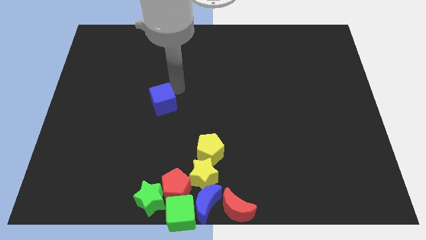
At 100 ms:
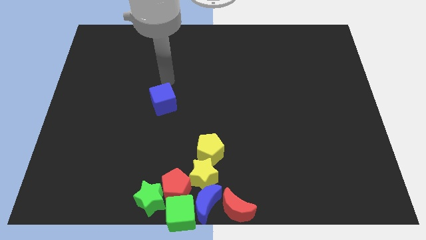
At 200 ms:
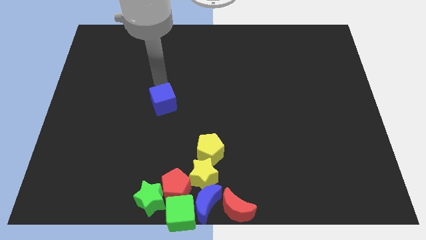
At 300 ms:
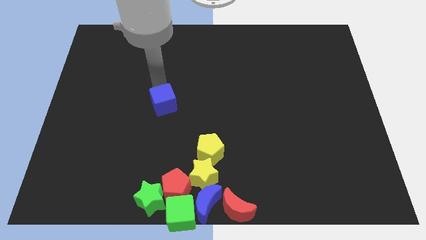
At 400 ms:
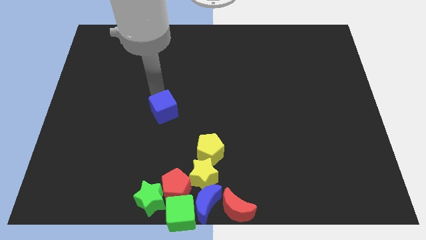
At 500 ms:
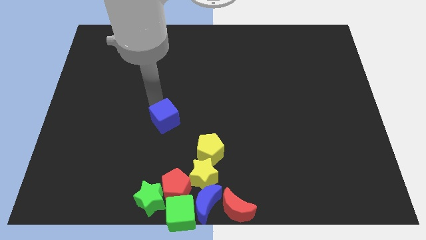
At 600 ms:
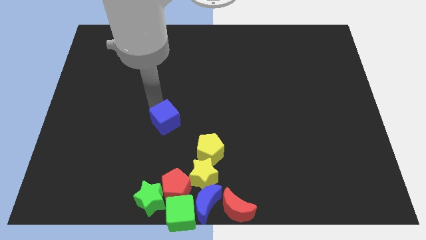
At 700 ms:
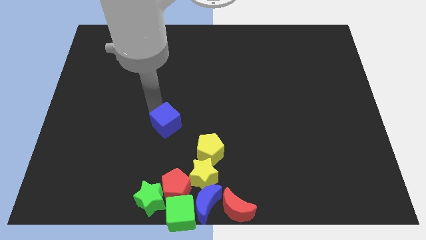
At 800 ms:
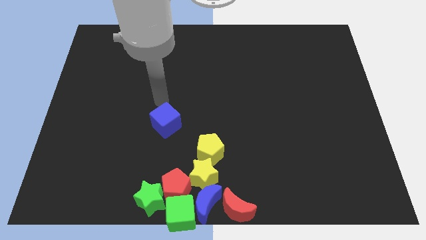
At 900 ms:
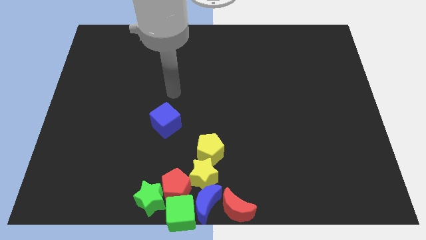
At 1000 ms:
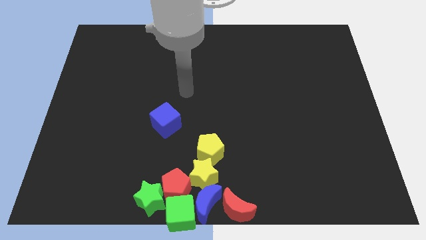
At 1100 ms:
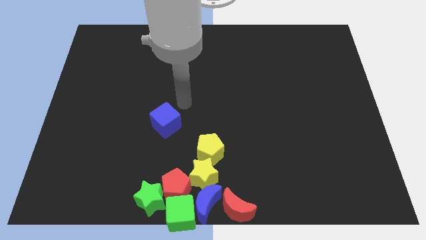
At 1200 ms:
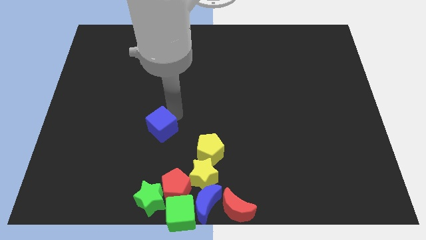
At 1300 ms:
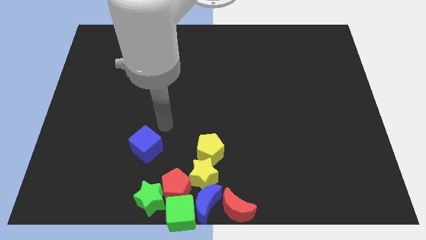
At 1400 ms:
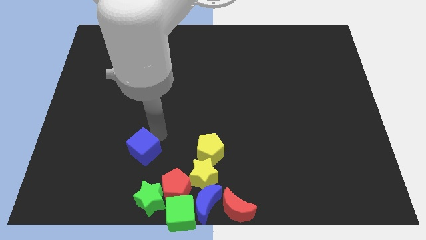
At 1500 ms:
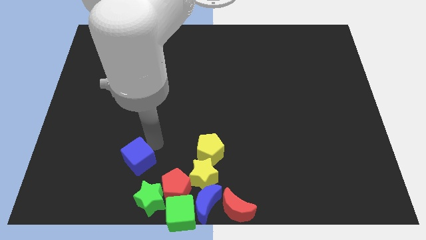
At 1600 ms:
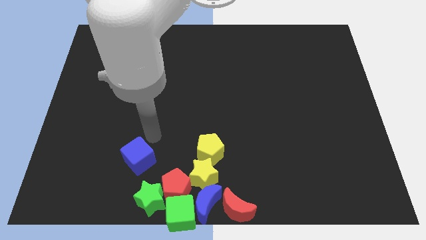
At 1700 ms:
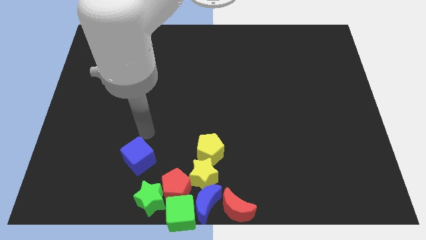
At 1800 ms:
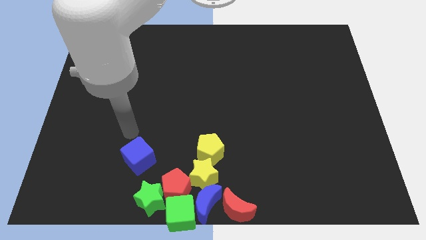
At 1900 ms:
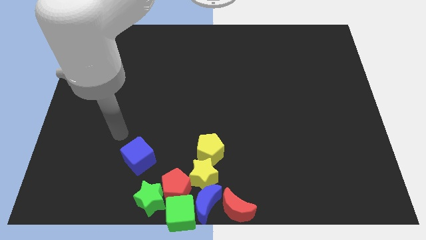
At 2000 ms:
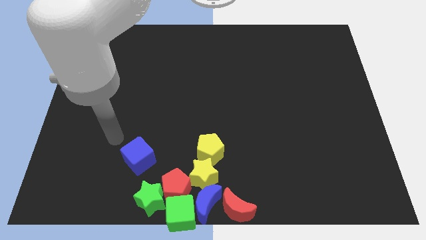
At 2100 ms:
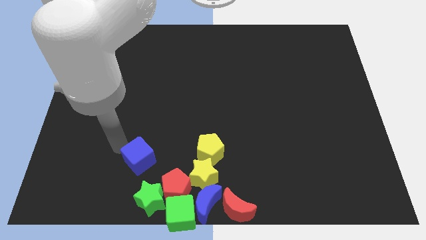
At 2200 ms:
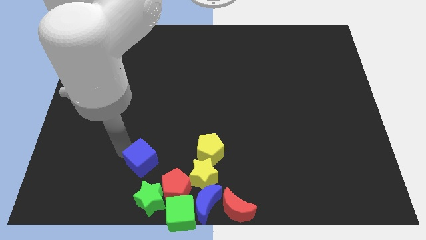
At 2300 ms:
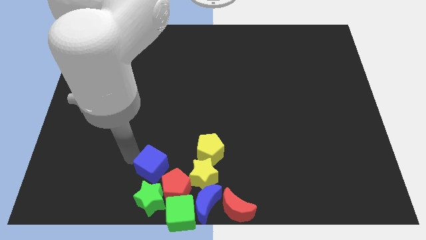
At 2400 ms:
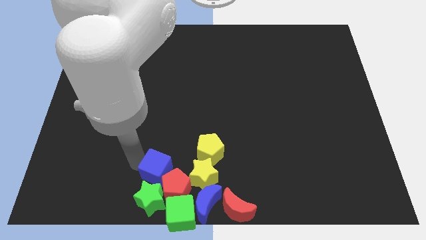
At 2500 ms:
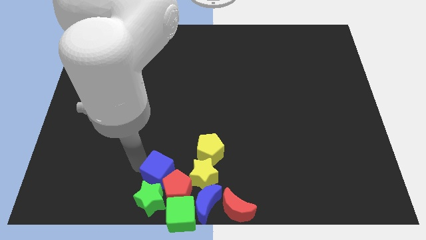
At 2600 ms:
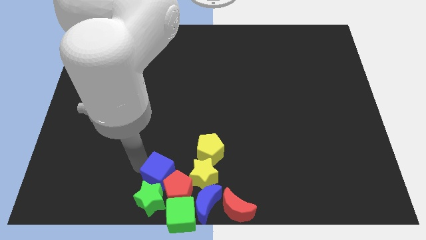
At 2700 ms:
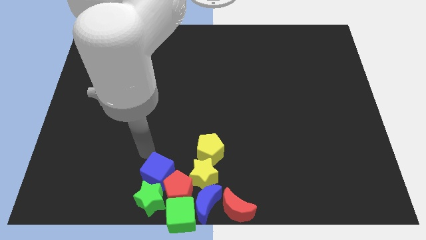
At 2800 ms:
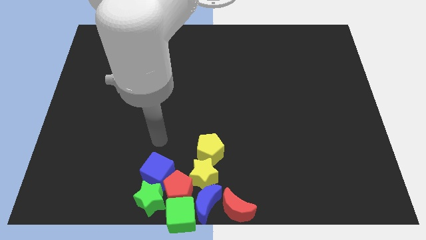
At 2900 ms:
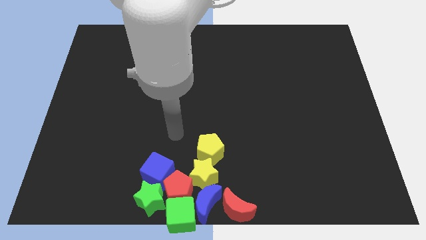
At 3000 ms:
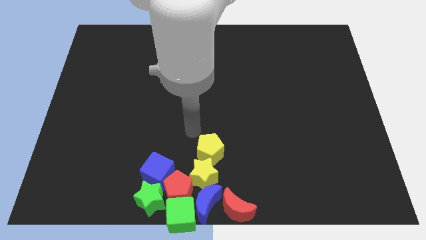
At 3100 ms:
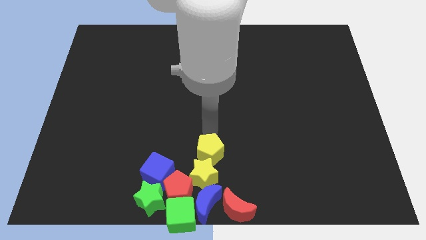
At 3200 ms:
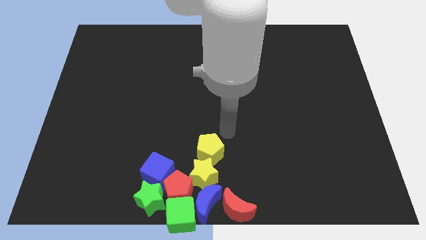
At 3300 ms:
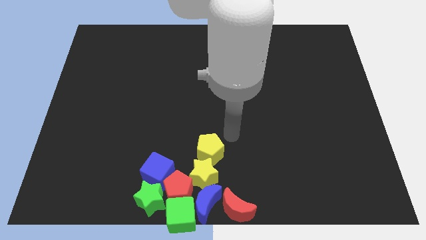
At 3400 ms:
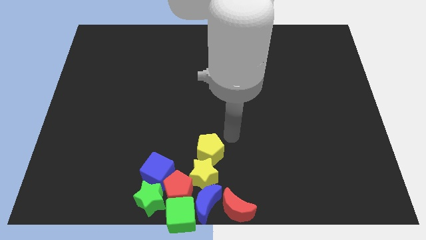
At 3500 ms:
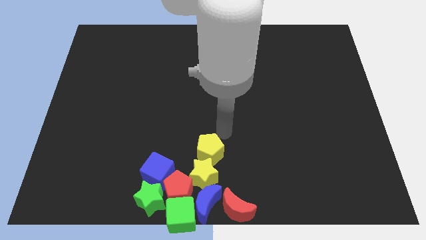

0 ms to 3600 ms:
push the blue cube above the green star

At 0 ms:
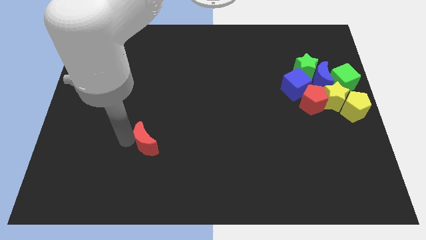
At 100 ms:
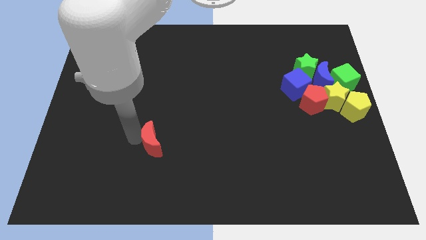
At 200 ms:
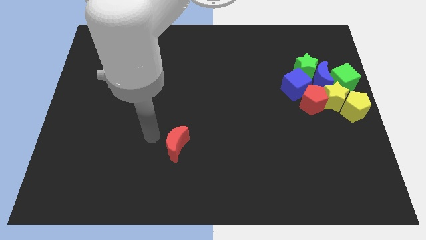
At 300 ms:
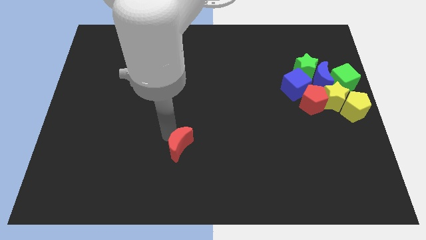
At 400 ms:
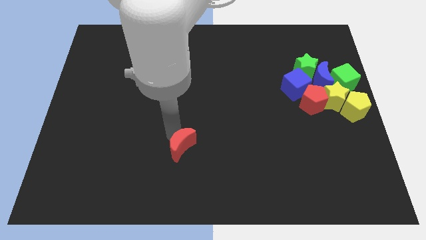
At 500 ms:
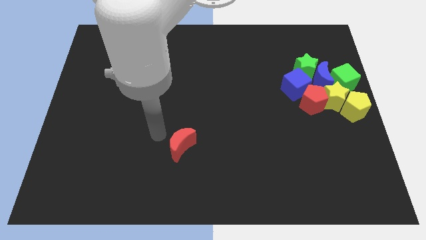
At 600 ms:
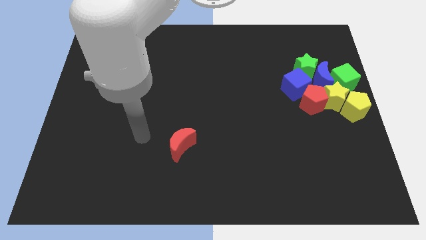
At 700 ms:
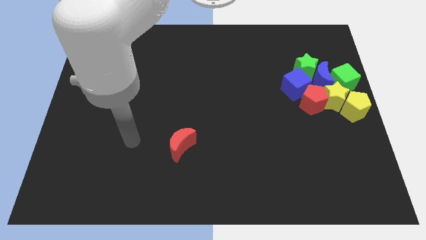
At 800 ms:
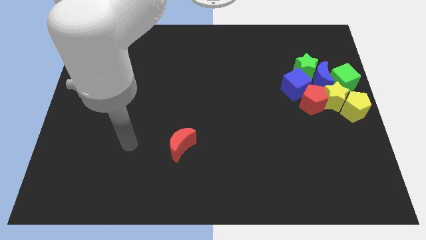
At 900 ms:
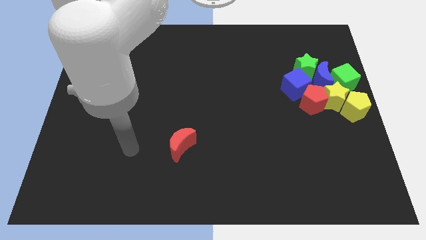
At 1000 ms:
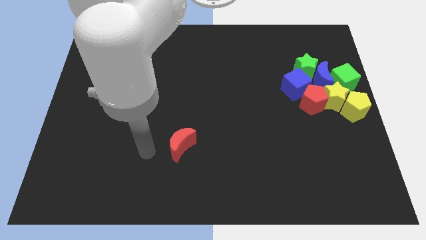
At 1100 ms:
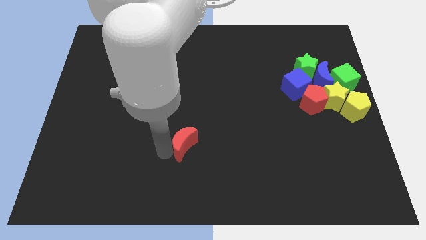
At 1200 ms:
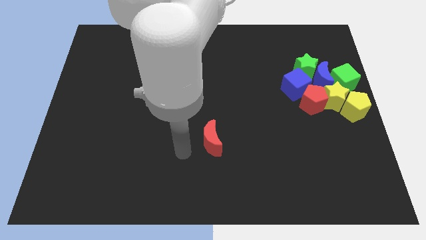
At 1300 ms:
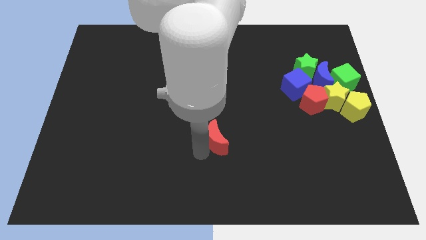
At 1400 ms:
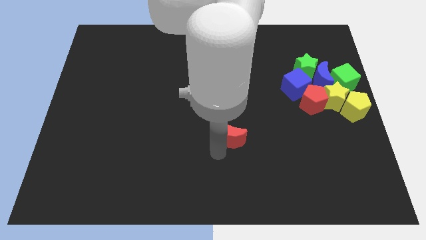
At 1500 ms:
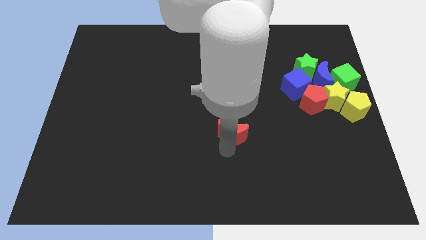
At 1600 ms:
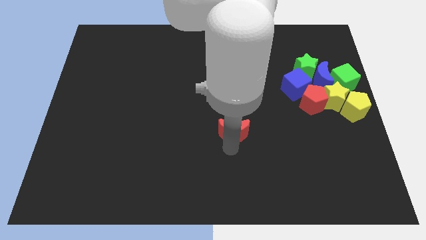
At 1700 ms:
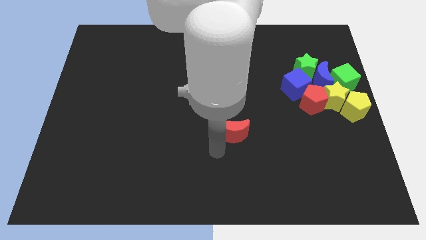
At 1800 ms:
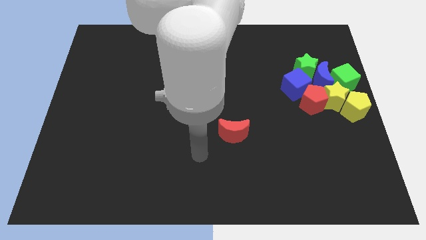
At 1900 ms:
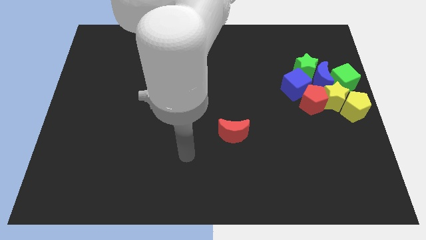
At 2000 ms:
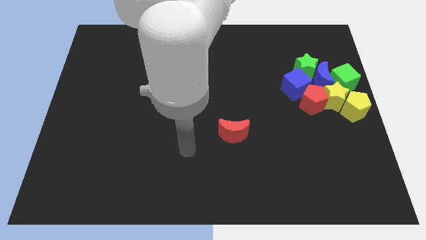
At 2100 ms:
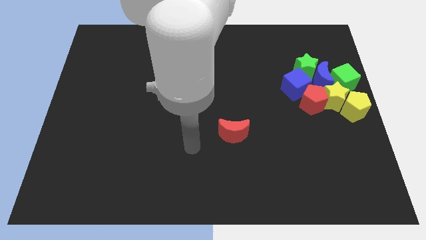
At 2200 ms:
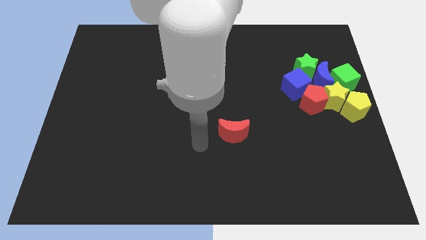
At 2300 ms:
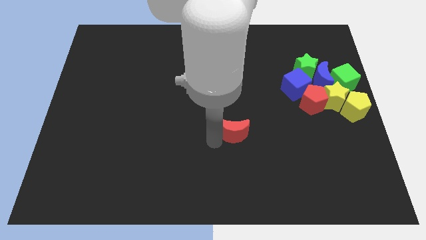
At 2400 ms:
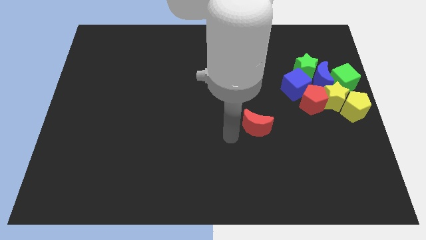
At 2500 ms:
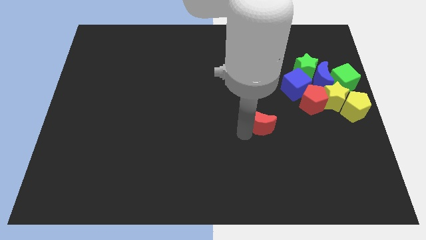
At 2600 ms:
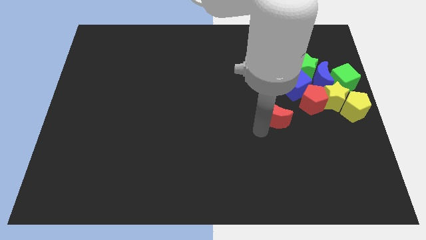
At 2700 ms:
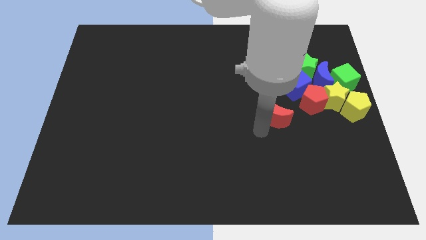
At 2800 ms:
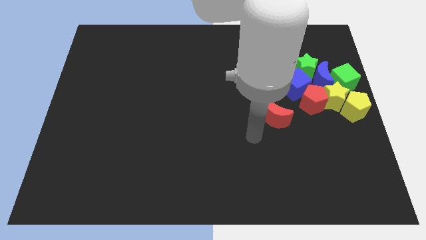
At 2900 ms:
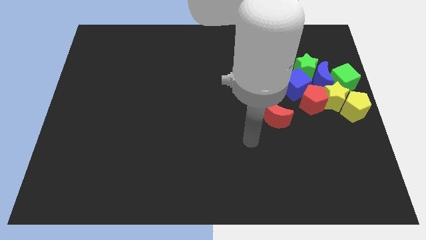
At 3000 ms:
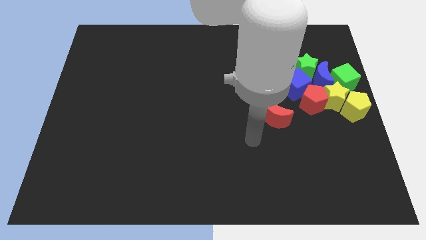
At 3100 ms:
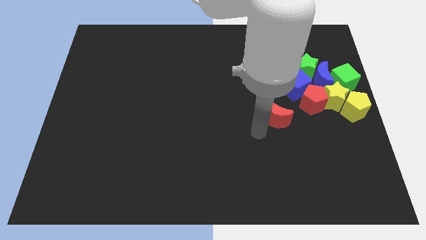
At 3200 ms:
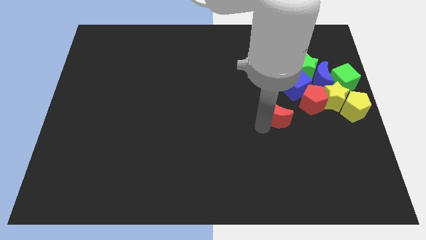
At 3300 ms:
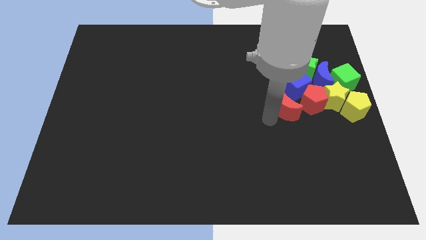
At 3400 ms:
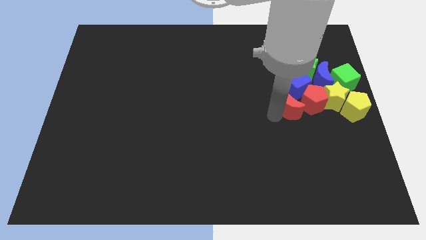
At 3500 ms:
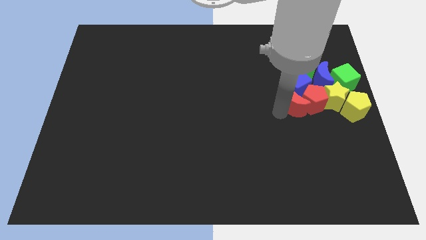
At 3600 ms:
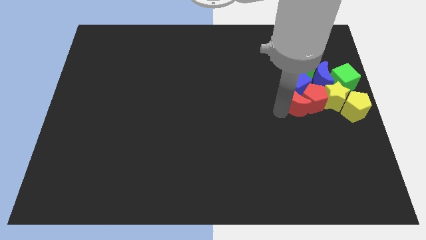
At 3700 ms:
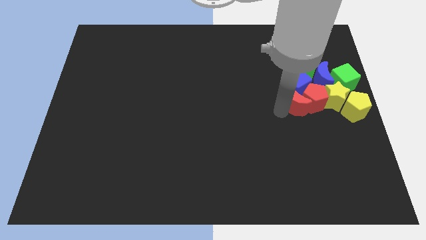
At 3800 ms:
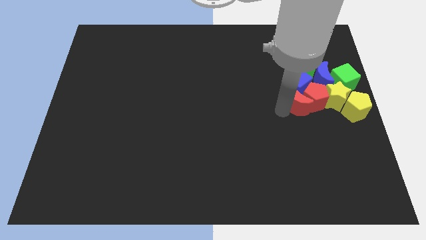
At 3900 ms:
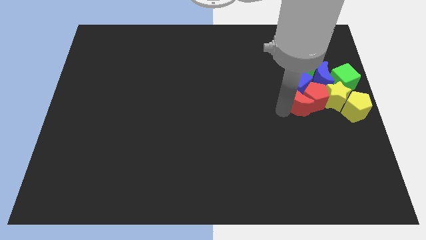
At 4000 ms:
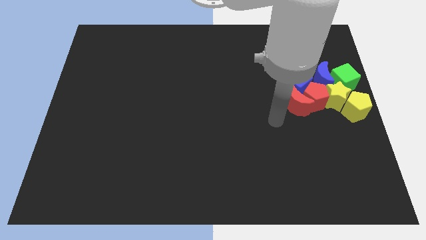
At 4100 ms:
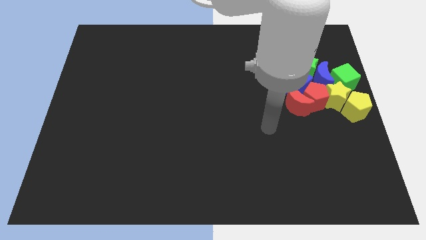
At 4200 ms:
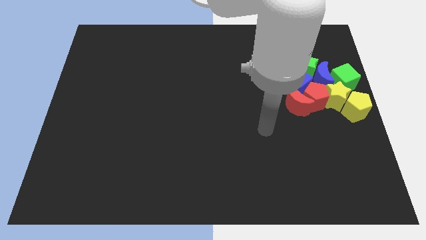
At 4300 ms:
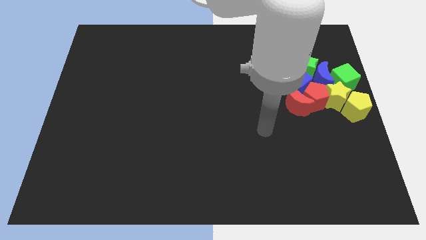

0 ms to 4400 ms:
move red crescent into the group of blocks

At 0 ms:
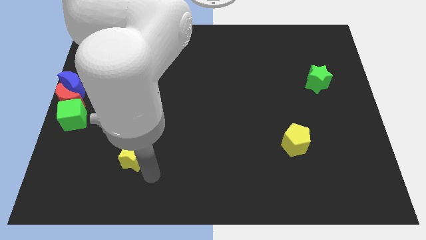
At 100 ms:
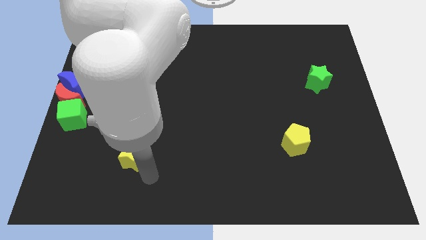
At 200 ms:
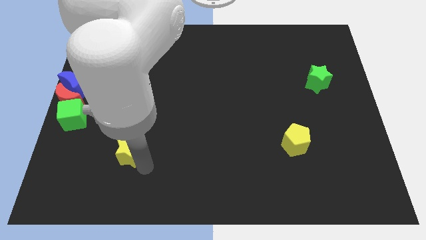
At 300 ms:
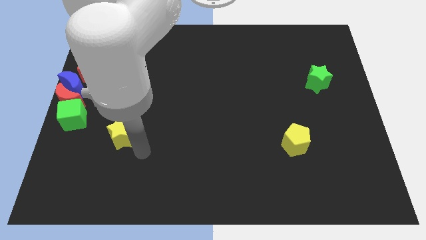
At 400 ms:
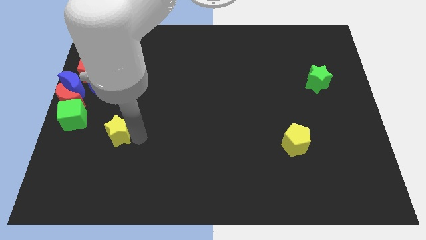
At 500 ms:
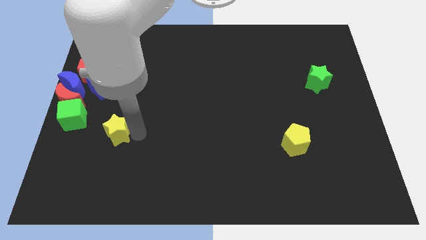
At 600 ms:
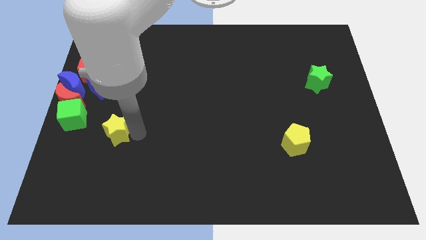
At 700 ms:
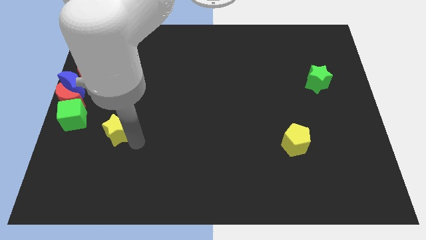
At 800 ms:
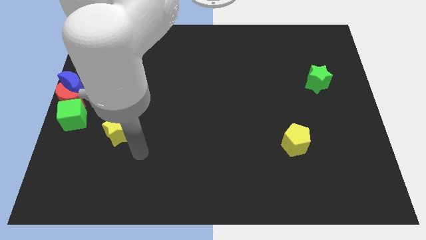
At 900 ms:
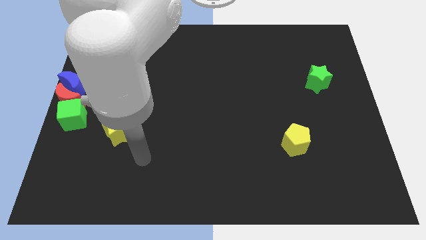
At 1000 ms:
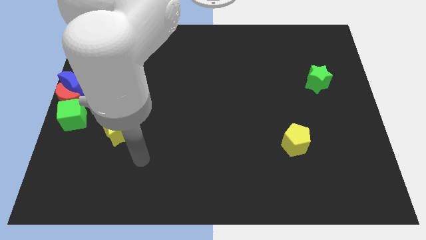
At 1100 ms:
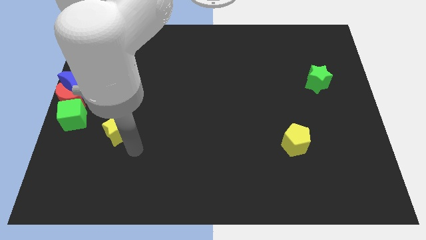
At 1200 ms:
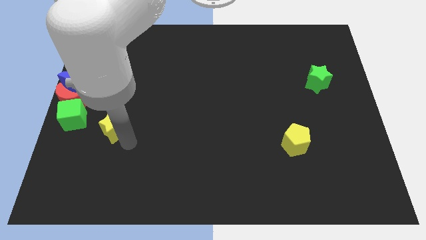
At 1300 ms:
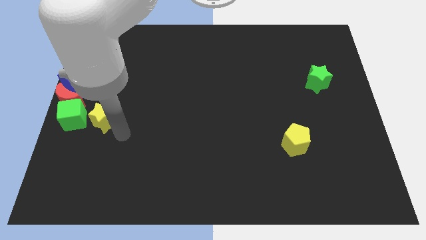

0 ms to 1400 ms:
place the yellow star close to the right of the green cube
